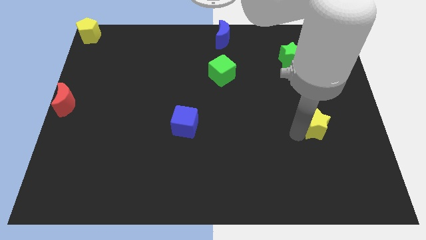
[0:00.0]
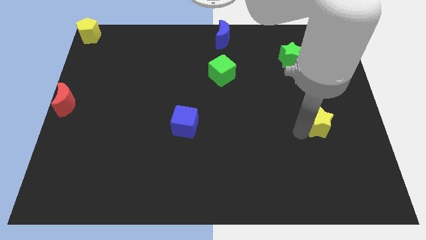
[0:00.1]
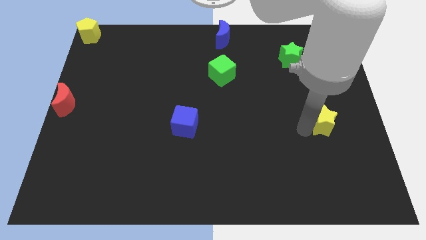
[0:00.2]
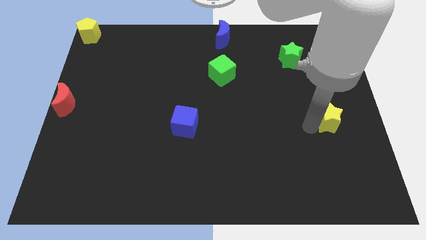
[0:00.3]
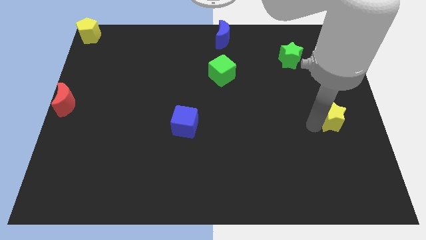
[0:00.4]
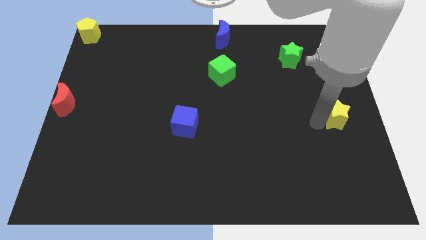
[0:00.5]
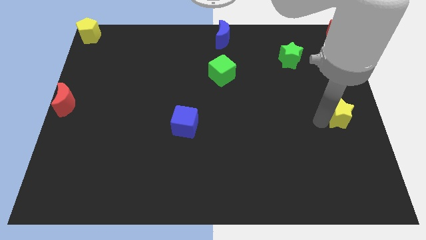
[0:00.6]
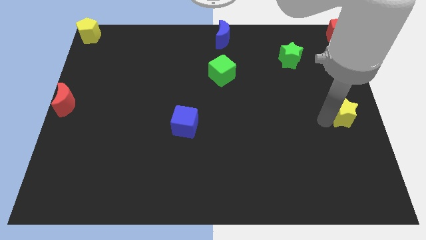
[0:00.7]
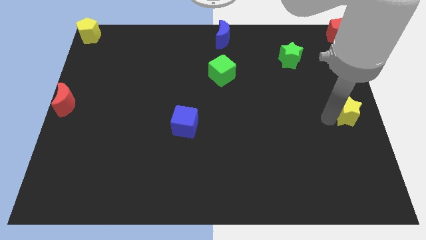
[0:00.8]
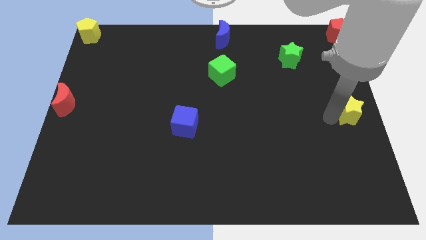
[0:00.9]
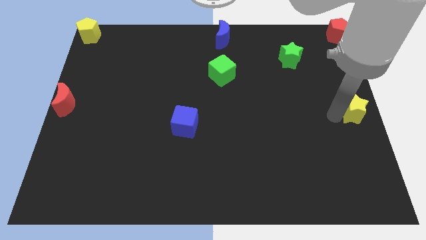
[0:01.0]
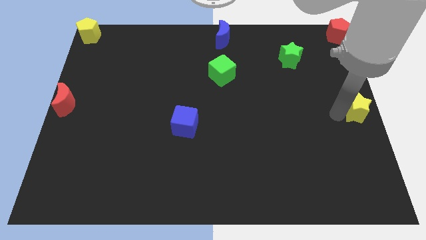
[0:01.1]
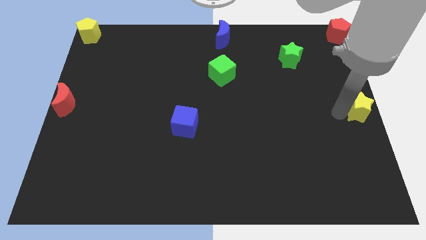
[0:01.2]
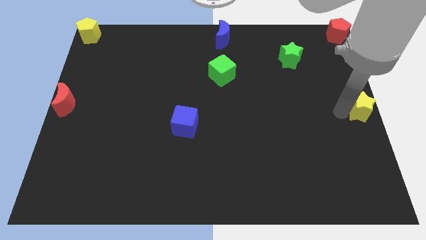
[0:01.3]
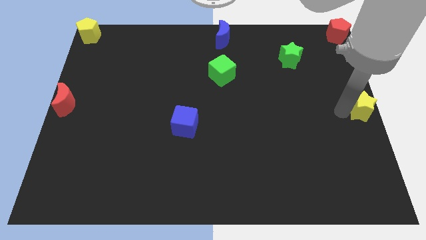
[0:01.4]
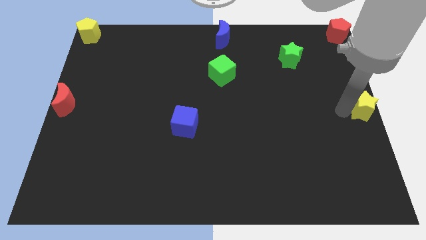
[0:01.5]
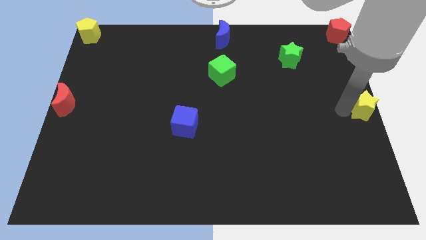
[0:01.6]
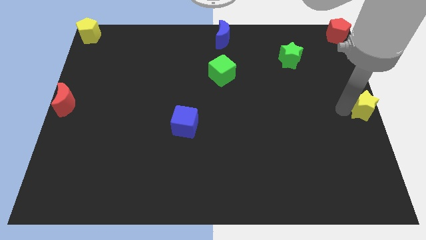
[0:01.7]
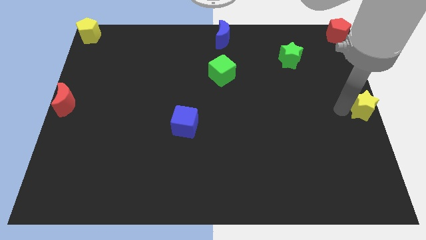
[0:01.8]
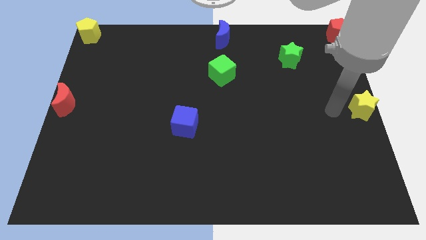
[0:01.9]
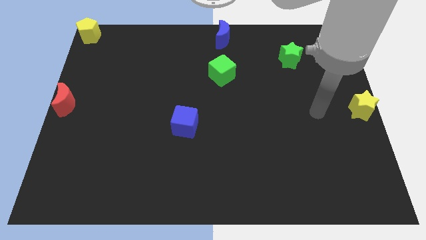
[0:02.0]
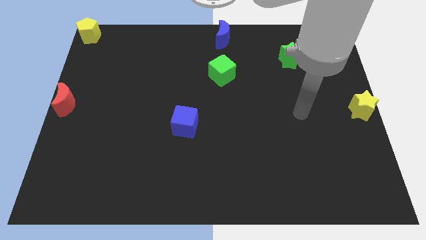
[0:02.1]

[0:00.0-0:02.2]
place the yellow star at the center right of the board

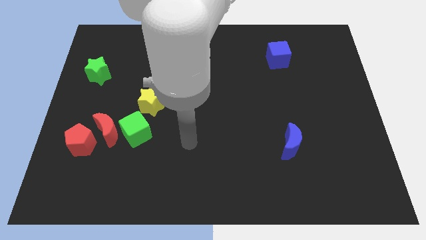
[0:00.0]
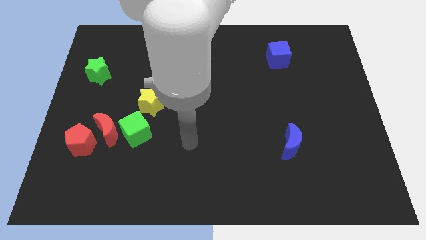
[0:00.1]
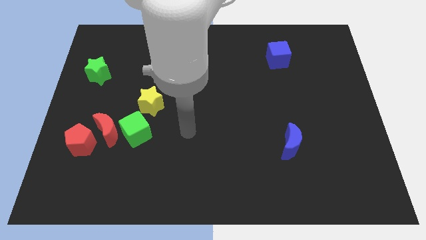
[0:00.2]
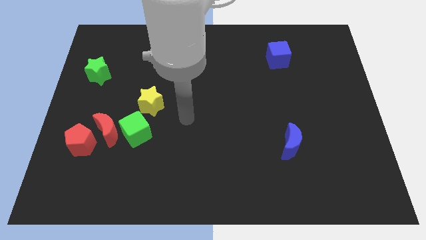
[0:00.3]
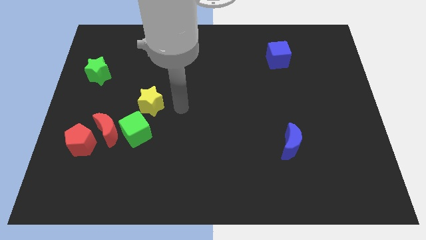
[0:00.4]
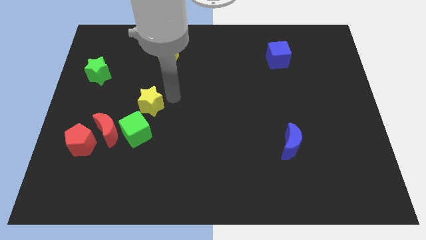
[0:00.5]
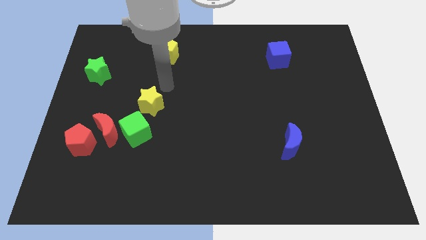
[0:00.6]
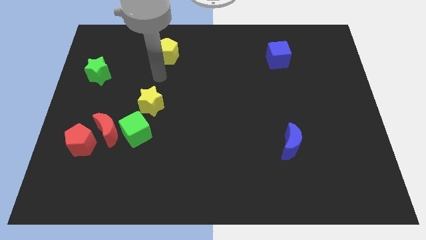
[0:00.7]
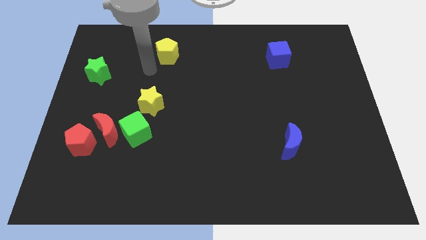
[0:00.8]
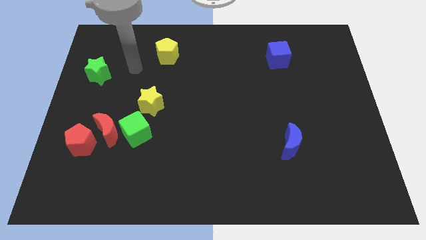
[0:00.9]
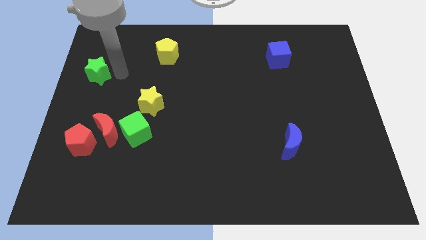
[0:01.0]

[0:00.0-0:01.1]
move your arm to the right of green star

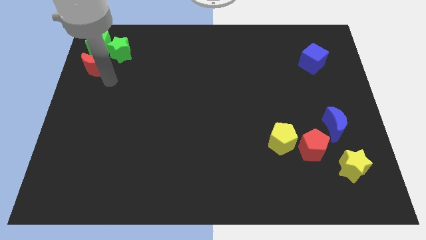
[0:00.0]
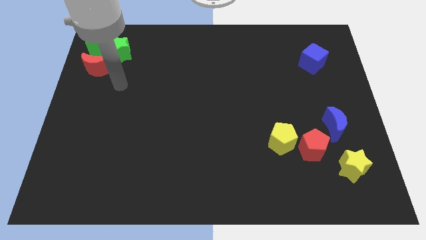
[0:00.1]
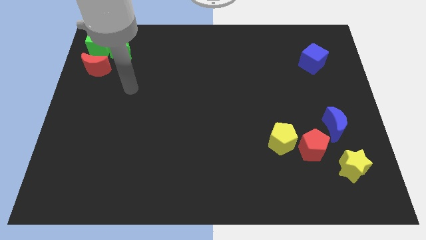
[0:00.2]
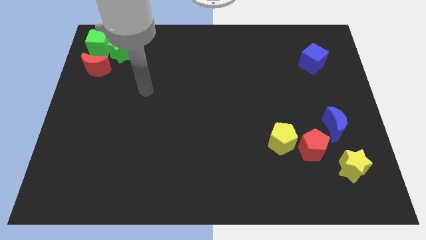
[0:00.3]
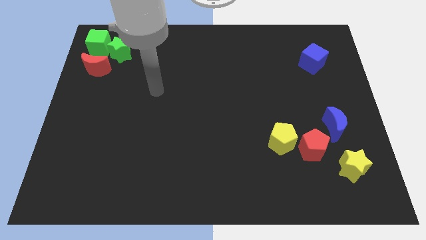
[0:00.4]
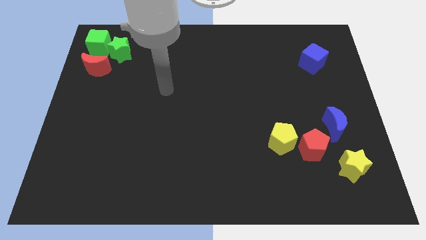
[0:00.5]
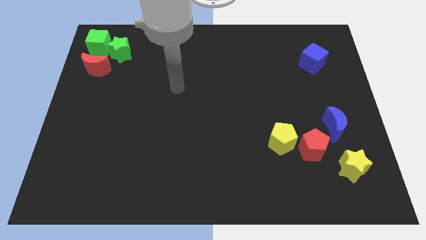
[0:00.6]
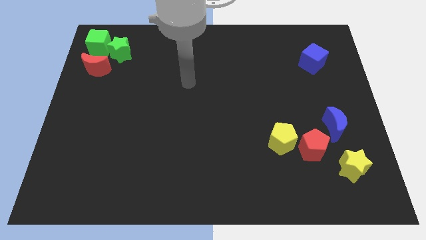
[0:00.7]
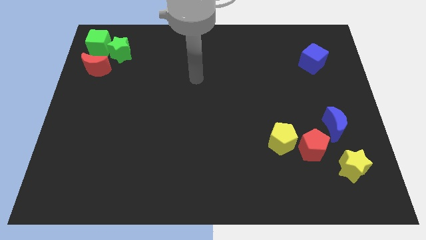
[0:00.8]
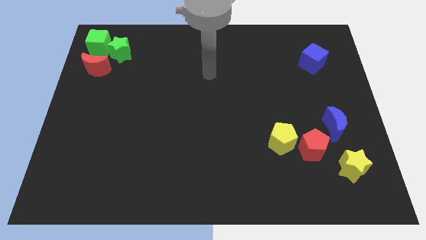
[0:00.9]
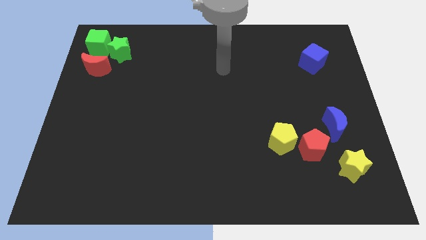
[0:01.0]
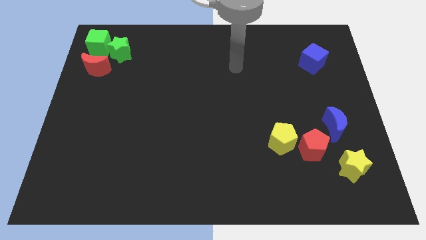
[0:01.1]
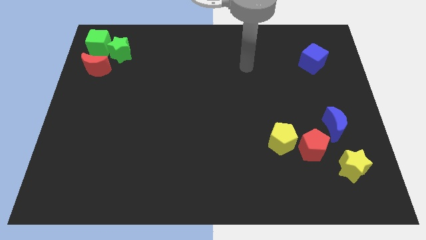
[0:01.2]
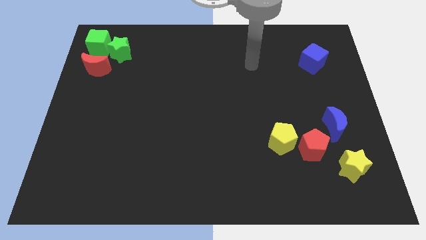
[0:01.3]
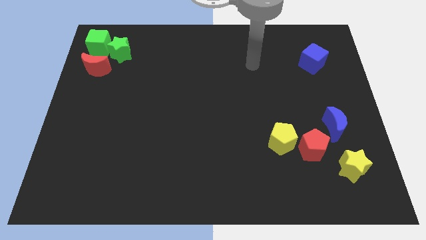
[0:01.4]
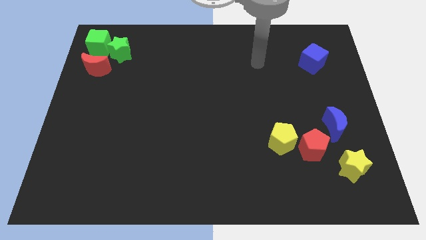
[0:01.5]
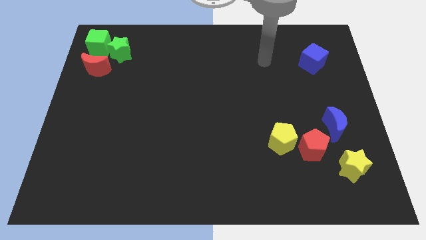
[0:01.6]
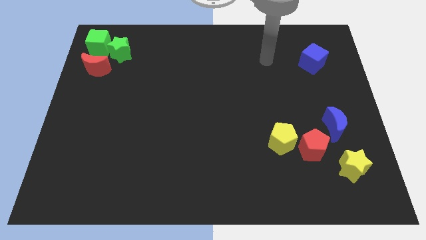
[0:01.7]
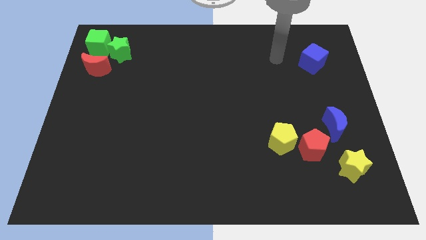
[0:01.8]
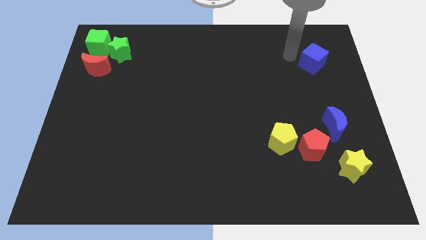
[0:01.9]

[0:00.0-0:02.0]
move yourself away from the red crescent

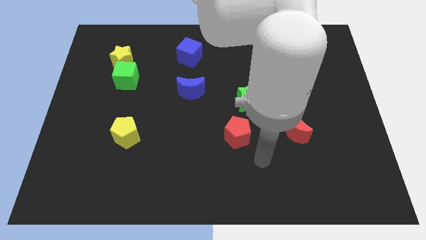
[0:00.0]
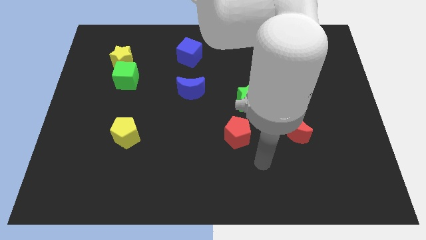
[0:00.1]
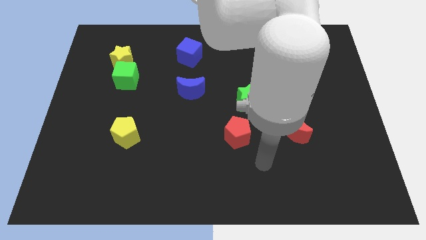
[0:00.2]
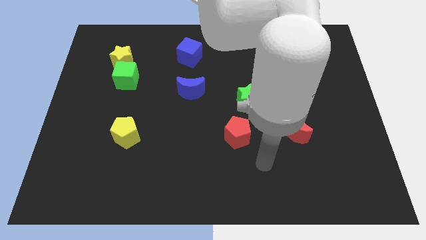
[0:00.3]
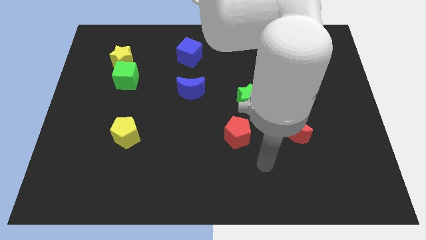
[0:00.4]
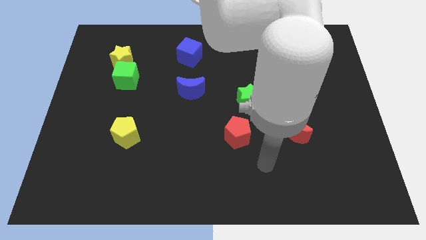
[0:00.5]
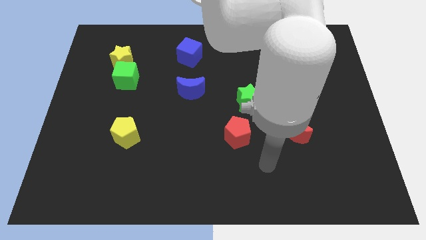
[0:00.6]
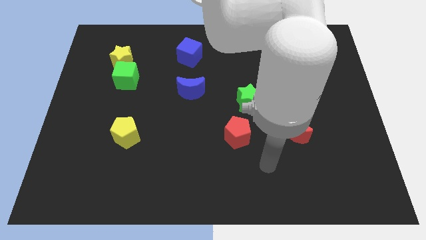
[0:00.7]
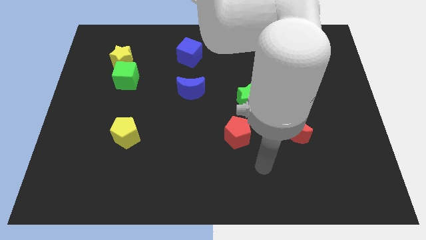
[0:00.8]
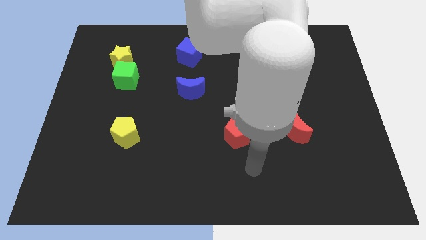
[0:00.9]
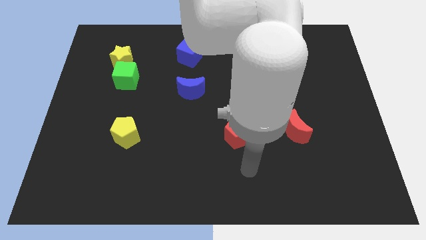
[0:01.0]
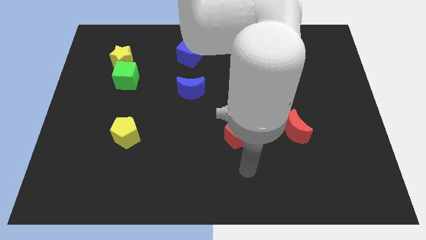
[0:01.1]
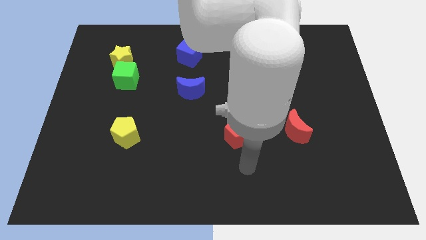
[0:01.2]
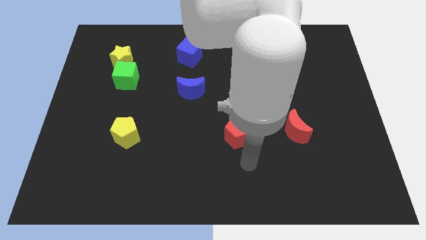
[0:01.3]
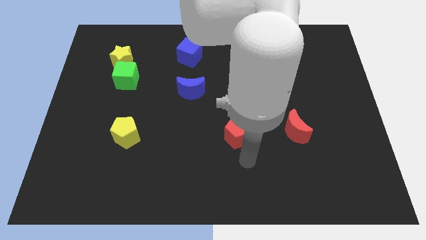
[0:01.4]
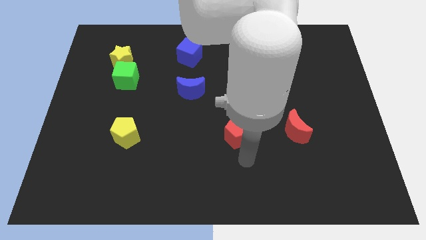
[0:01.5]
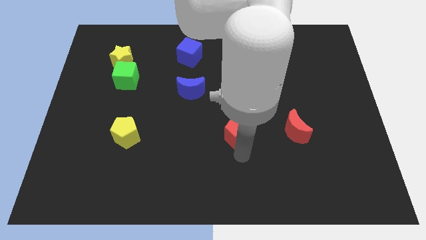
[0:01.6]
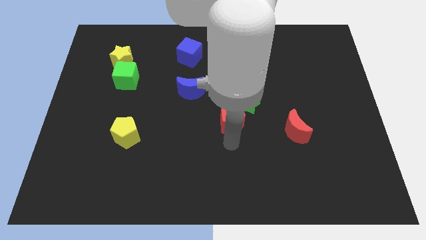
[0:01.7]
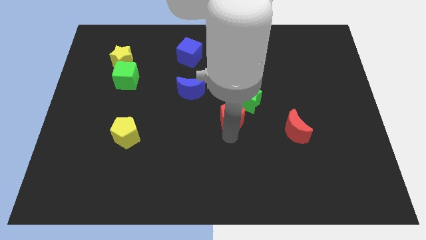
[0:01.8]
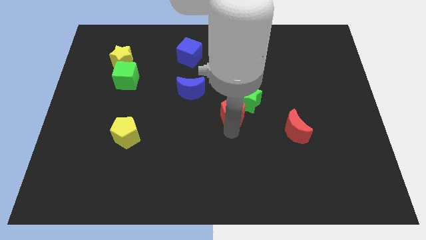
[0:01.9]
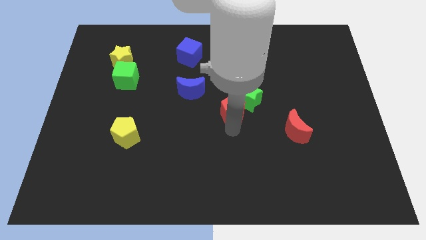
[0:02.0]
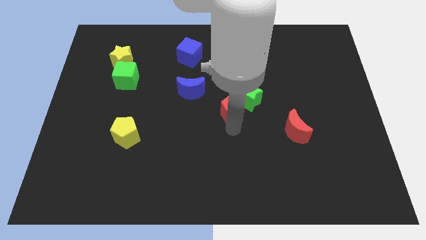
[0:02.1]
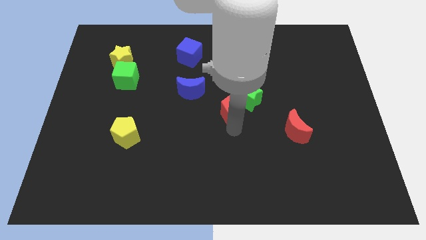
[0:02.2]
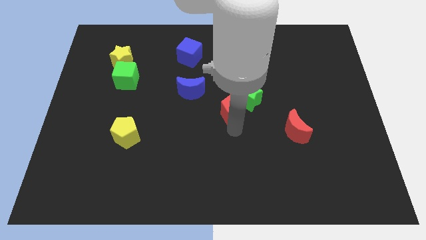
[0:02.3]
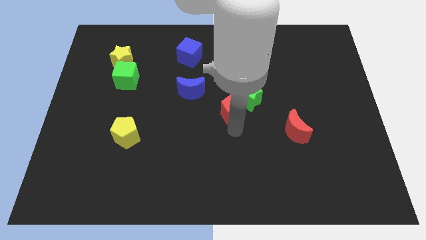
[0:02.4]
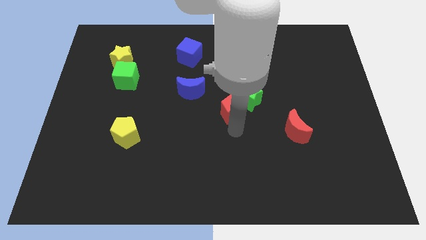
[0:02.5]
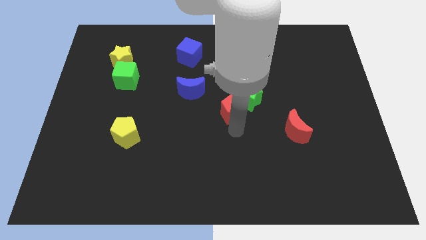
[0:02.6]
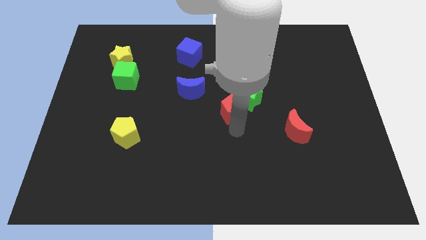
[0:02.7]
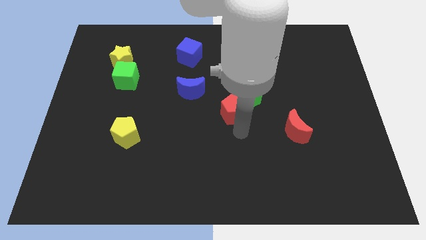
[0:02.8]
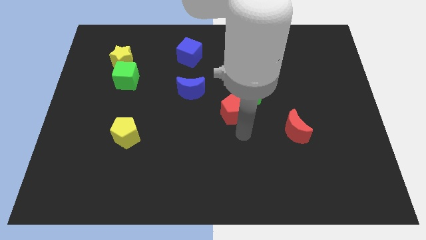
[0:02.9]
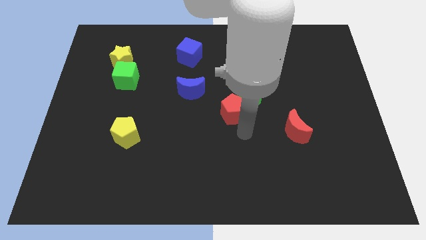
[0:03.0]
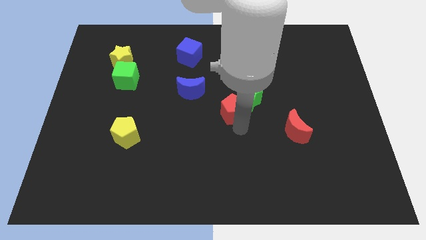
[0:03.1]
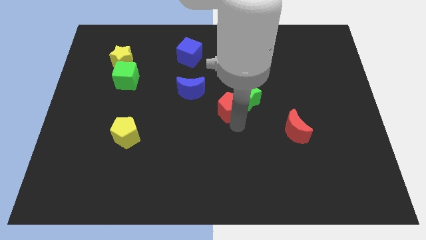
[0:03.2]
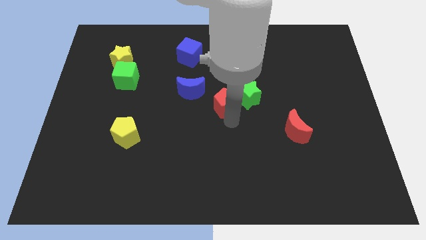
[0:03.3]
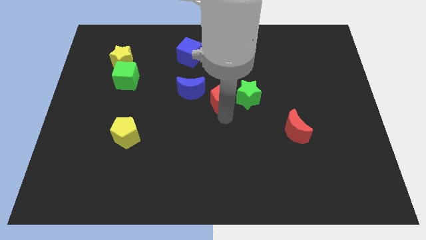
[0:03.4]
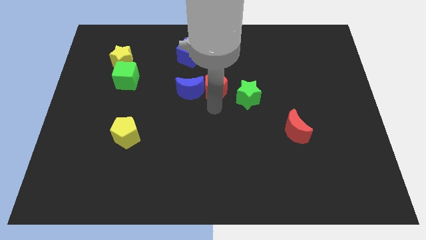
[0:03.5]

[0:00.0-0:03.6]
push the red pentagon in the center

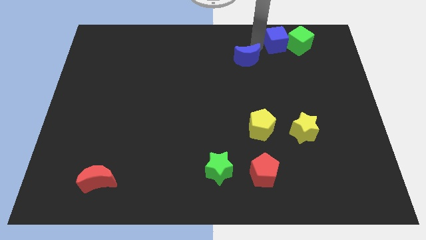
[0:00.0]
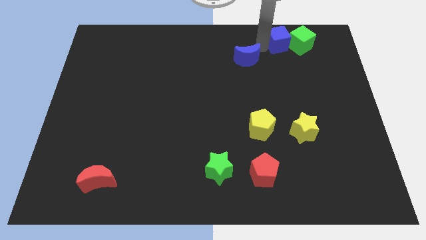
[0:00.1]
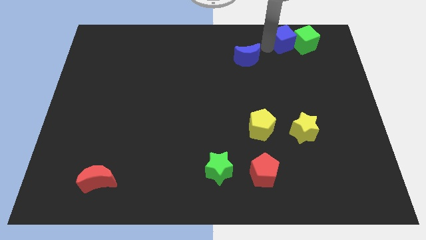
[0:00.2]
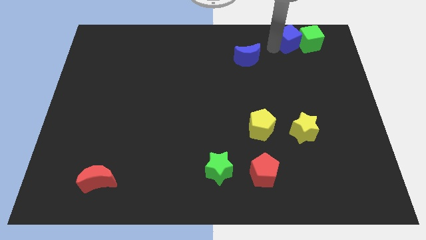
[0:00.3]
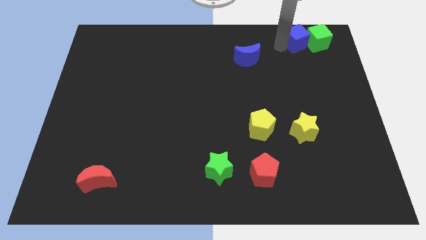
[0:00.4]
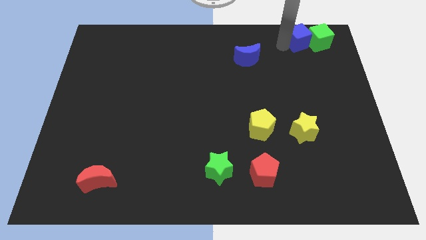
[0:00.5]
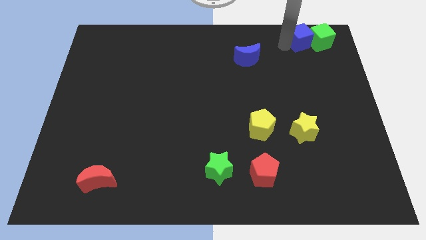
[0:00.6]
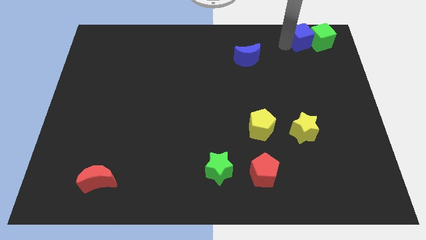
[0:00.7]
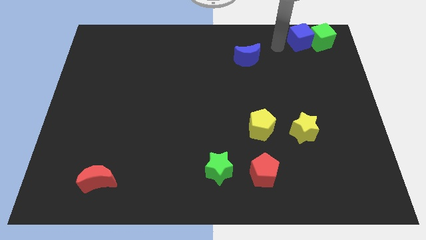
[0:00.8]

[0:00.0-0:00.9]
move the blue cube along with green cube to the top right corner of the board
